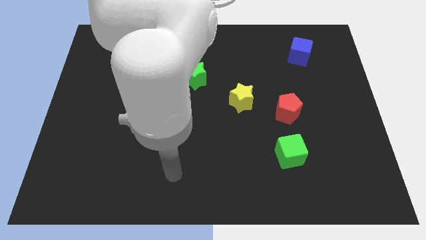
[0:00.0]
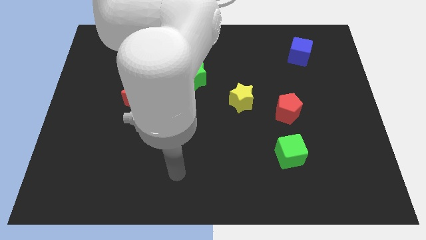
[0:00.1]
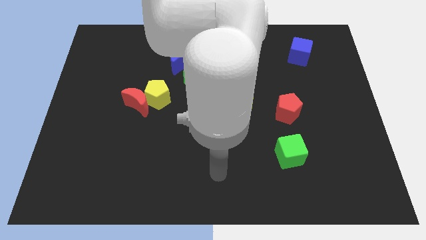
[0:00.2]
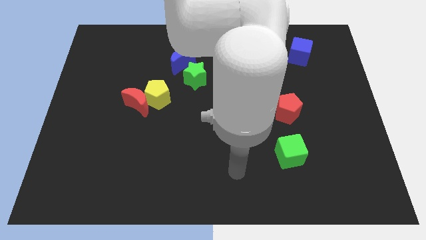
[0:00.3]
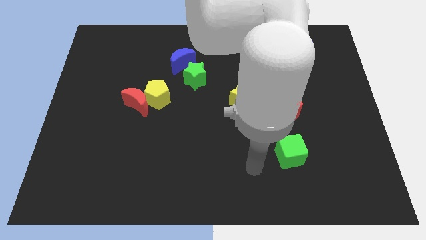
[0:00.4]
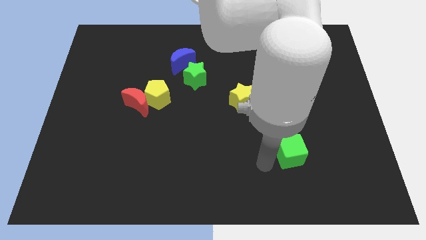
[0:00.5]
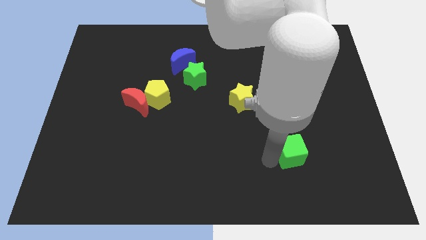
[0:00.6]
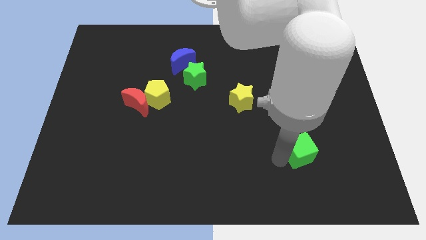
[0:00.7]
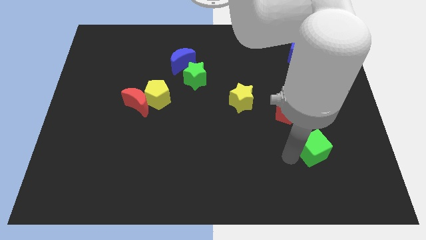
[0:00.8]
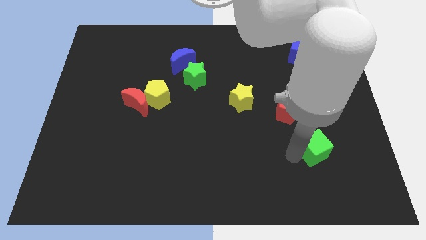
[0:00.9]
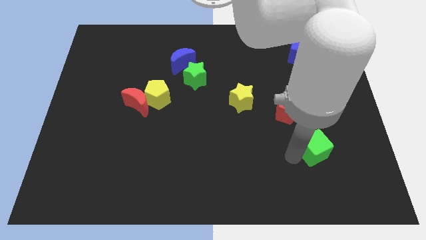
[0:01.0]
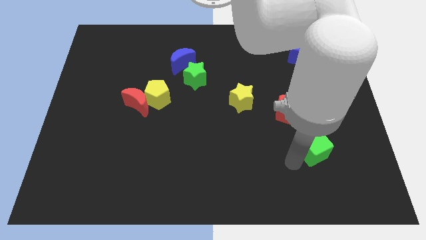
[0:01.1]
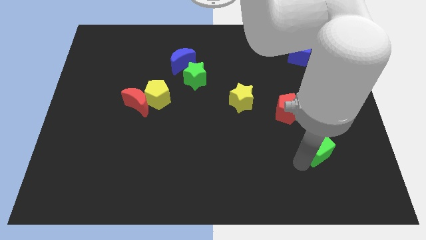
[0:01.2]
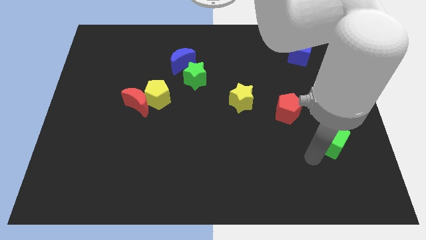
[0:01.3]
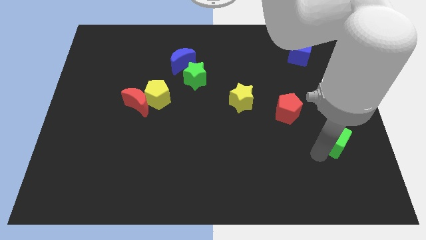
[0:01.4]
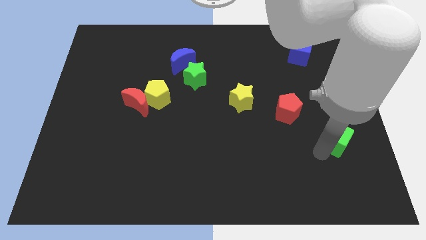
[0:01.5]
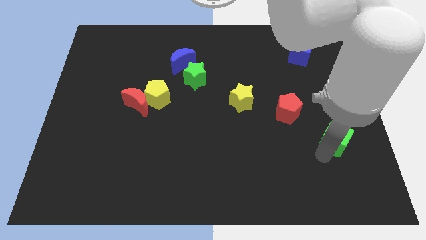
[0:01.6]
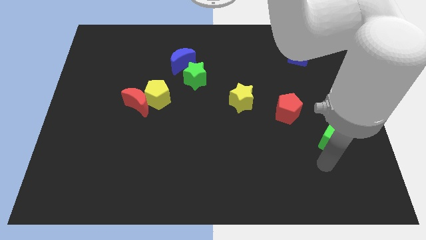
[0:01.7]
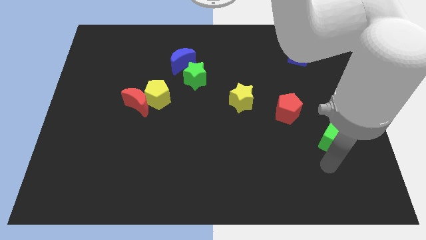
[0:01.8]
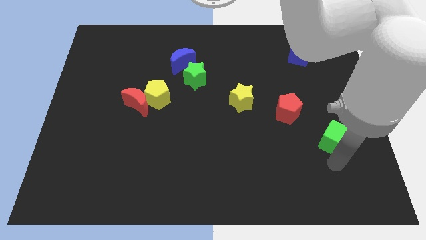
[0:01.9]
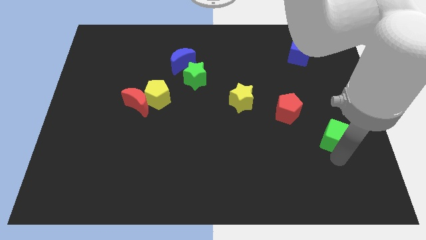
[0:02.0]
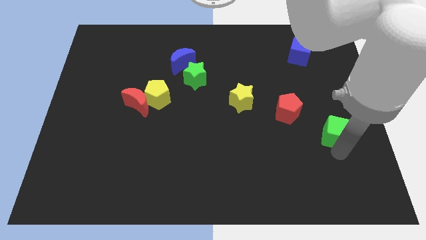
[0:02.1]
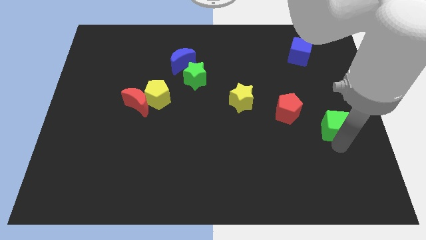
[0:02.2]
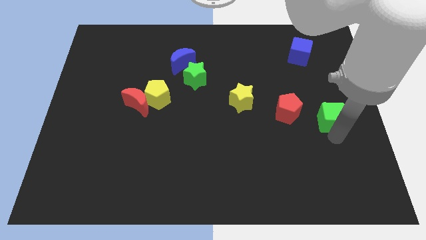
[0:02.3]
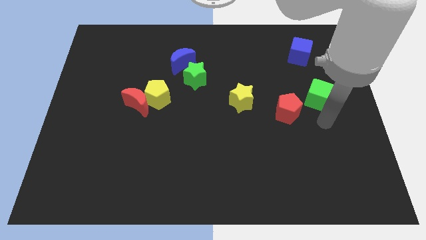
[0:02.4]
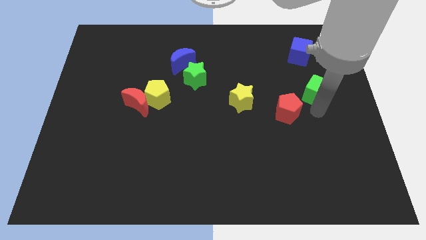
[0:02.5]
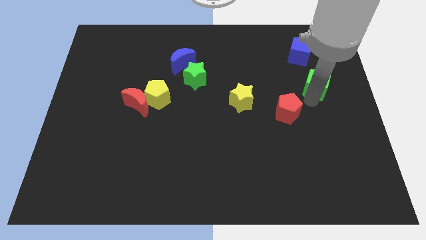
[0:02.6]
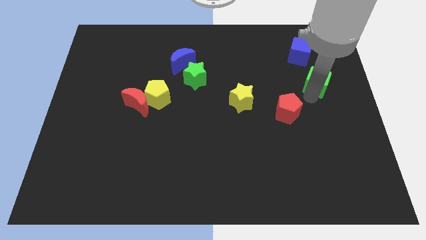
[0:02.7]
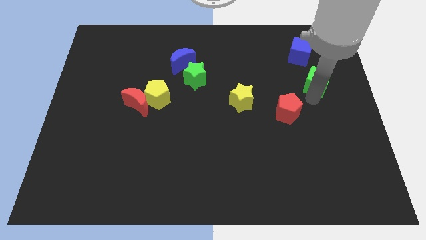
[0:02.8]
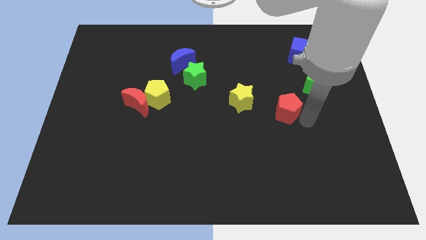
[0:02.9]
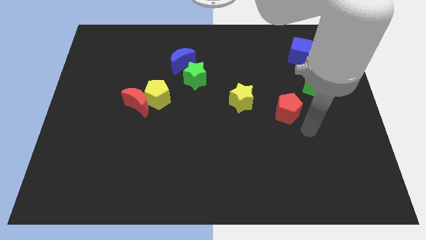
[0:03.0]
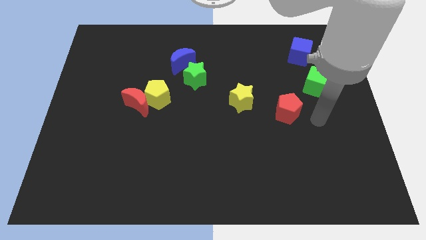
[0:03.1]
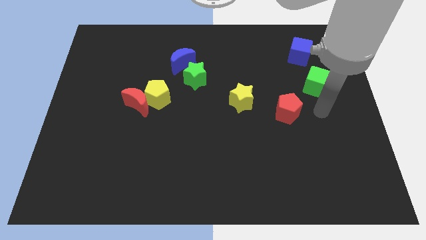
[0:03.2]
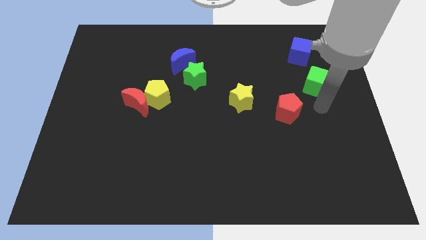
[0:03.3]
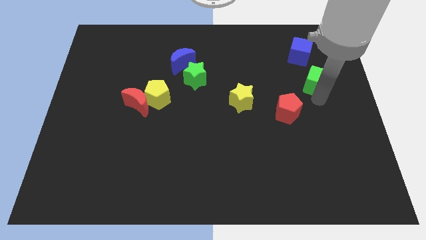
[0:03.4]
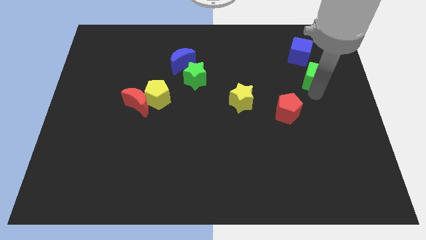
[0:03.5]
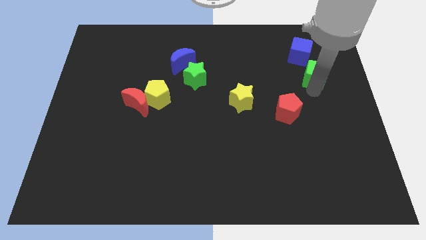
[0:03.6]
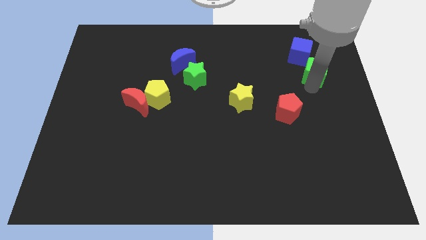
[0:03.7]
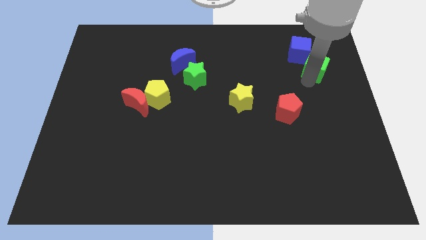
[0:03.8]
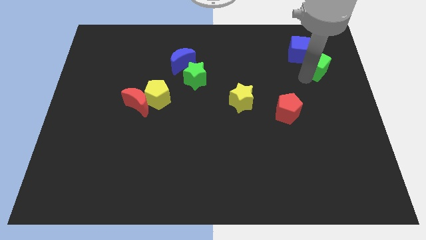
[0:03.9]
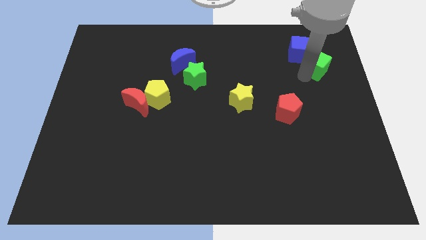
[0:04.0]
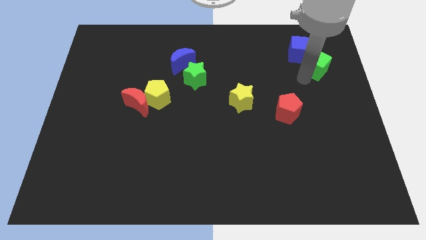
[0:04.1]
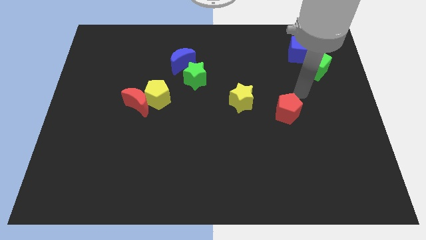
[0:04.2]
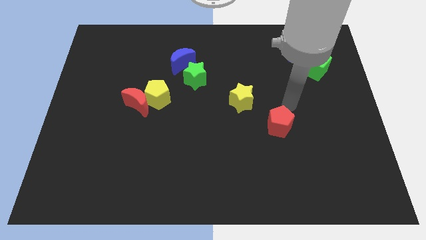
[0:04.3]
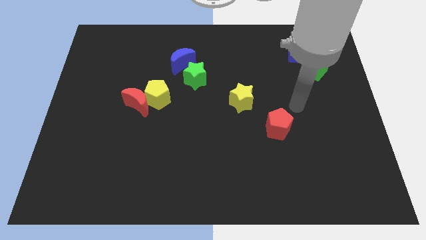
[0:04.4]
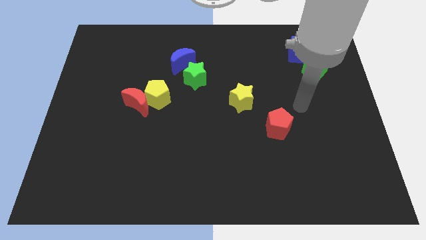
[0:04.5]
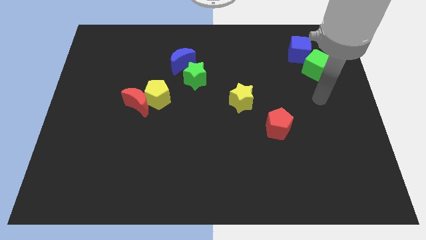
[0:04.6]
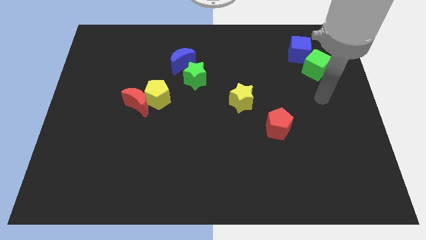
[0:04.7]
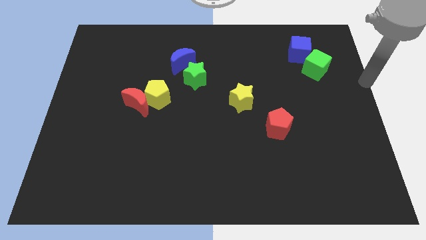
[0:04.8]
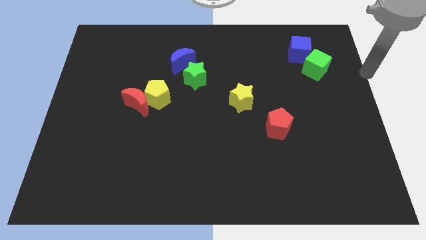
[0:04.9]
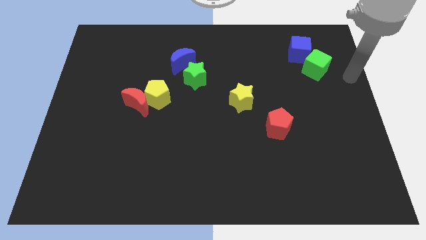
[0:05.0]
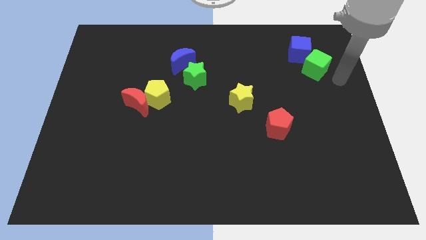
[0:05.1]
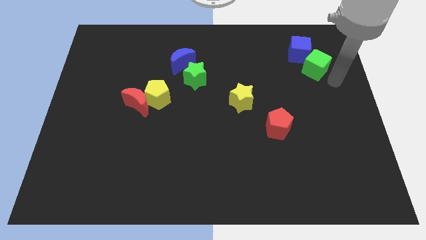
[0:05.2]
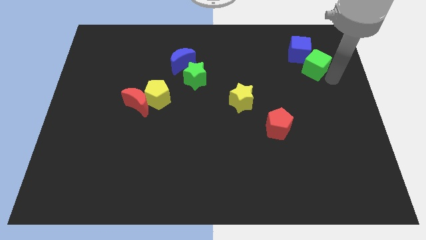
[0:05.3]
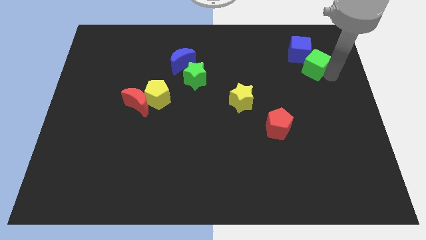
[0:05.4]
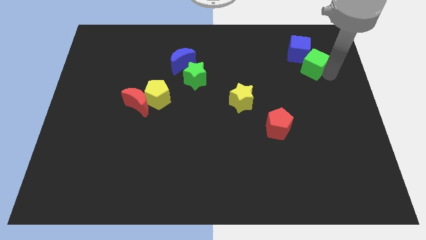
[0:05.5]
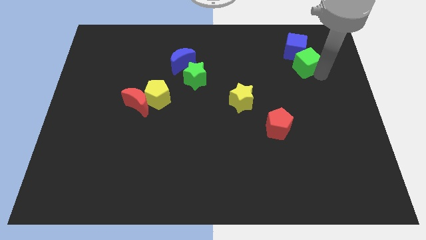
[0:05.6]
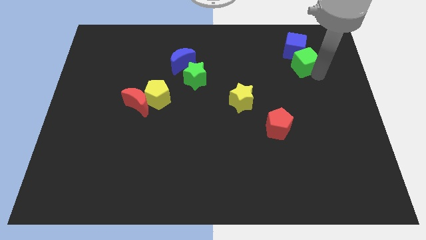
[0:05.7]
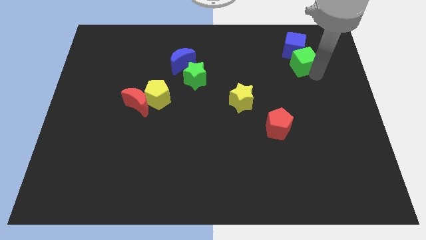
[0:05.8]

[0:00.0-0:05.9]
move the green cube towards the blue cube

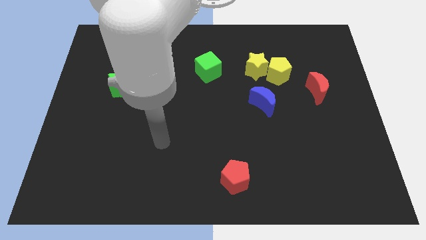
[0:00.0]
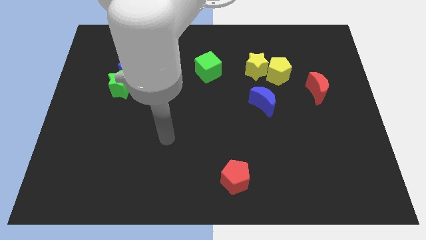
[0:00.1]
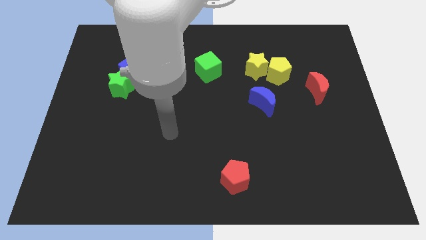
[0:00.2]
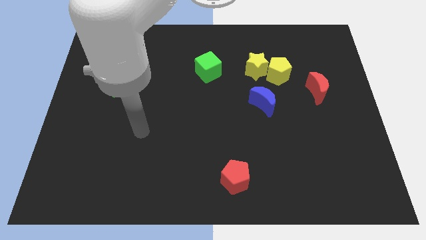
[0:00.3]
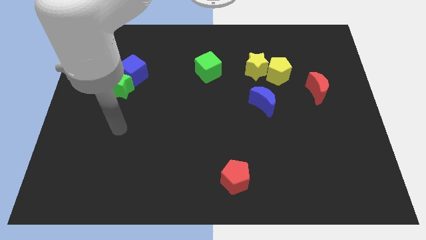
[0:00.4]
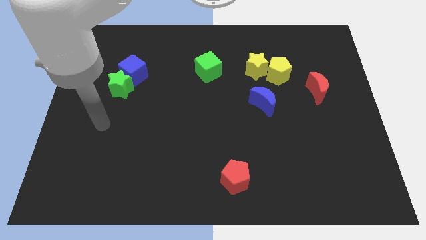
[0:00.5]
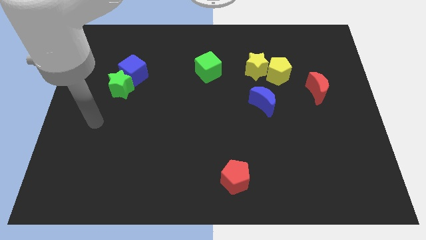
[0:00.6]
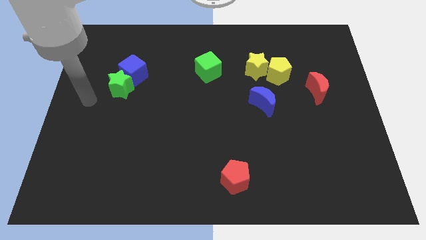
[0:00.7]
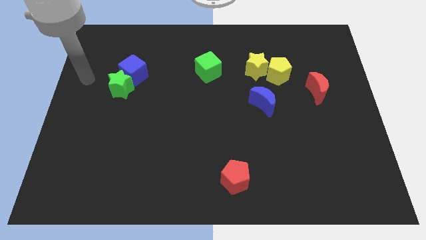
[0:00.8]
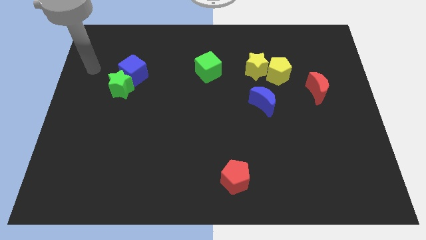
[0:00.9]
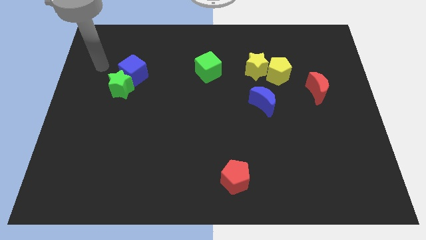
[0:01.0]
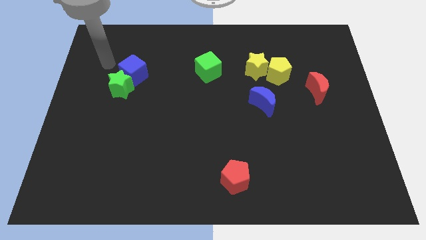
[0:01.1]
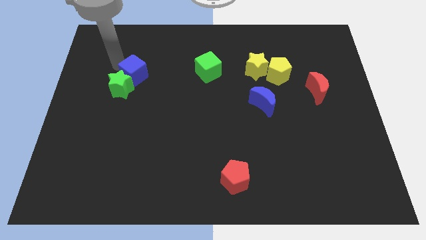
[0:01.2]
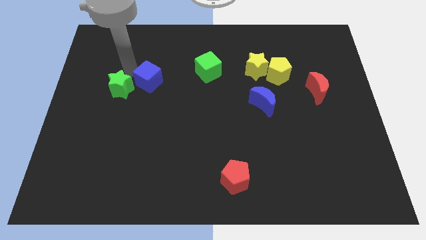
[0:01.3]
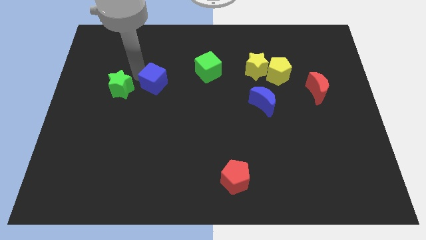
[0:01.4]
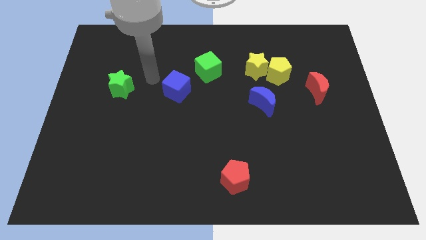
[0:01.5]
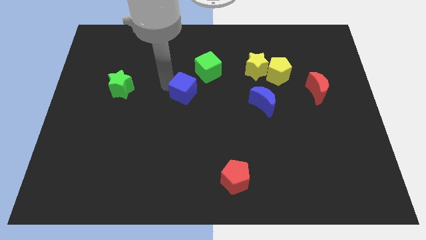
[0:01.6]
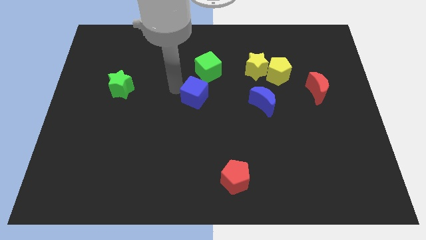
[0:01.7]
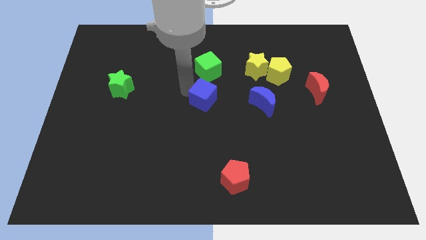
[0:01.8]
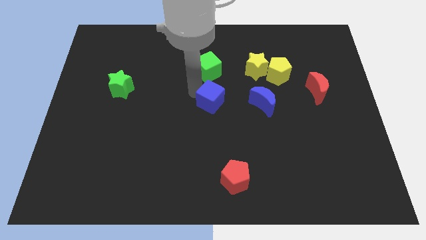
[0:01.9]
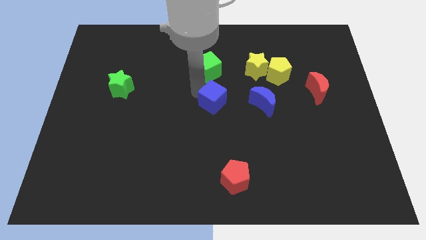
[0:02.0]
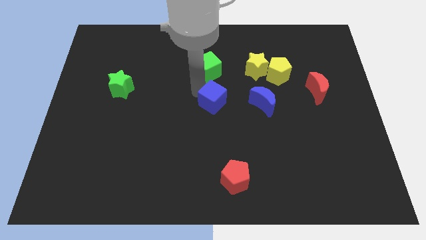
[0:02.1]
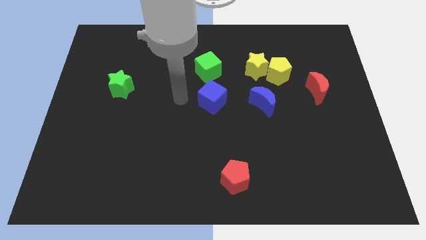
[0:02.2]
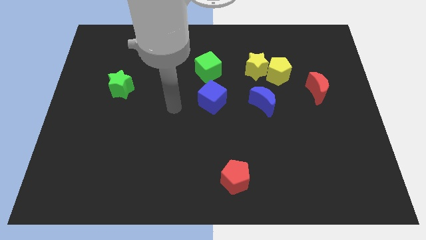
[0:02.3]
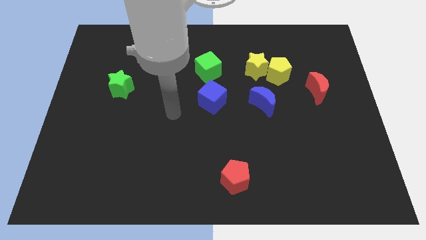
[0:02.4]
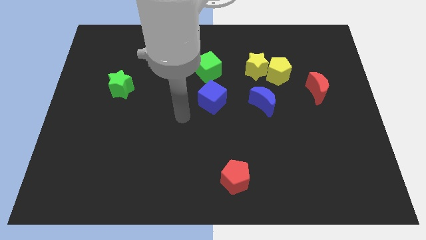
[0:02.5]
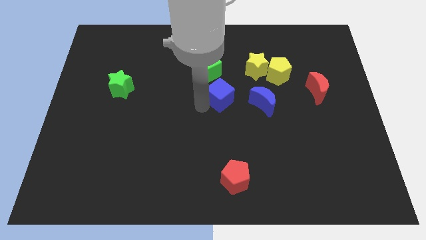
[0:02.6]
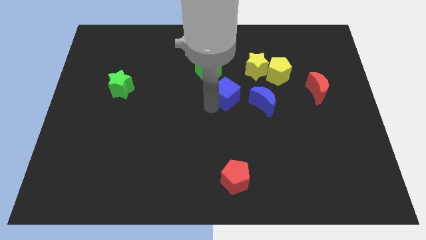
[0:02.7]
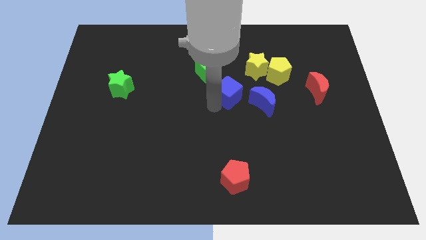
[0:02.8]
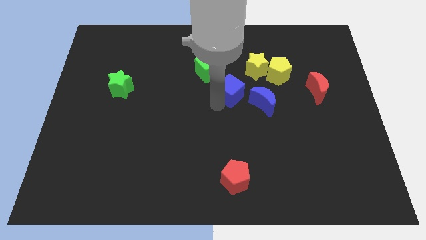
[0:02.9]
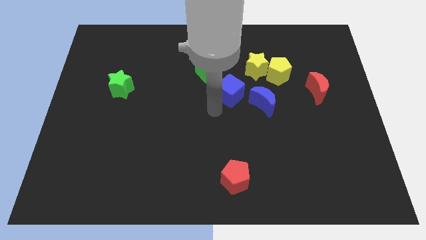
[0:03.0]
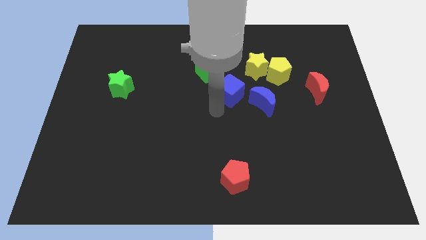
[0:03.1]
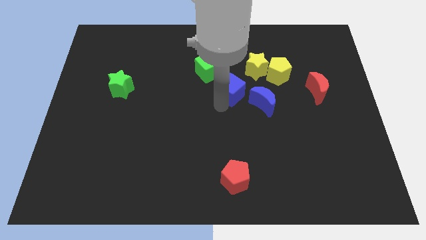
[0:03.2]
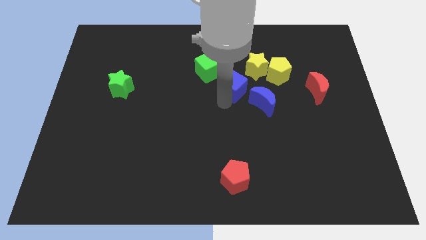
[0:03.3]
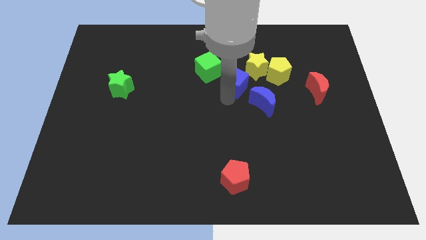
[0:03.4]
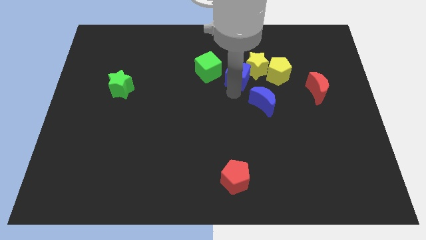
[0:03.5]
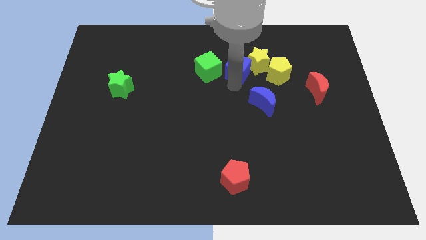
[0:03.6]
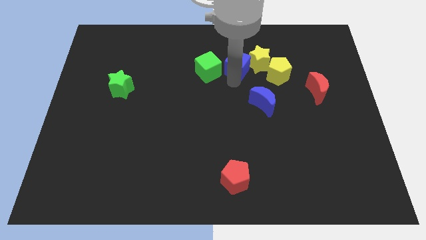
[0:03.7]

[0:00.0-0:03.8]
put the blue cube close to the yellow star
